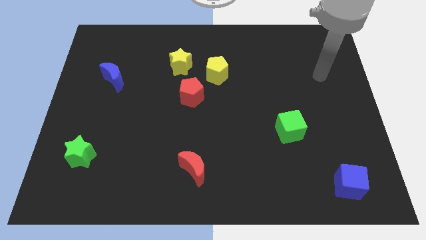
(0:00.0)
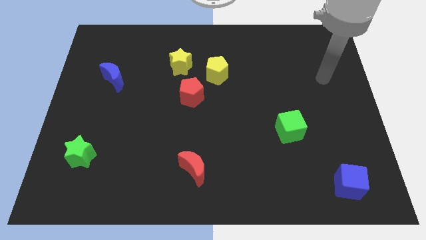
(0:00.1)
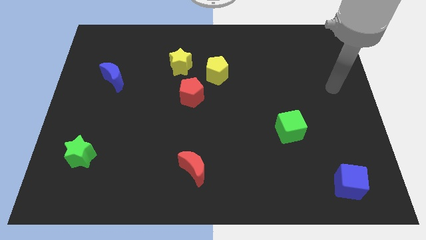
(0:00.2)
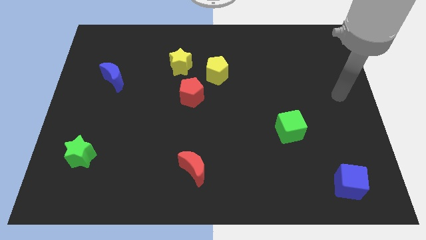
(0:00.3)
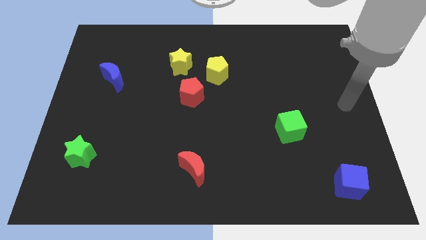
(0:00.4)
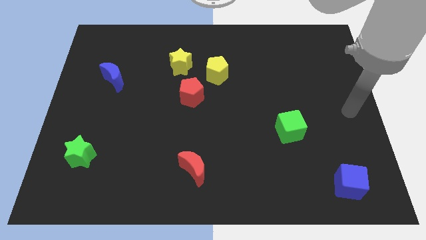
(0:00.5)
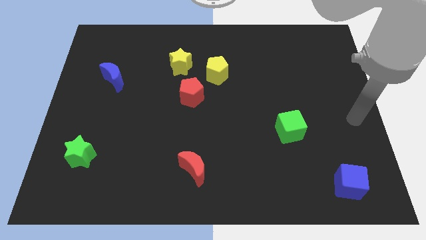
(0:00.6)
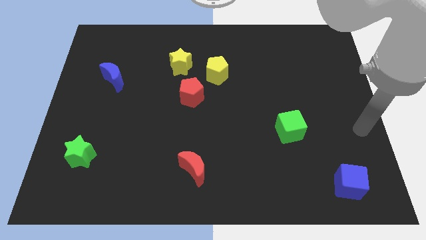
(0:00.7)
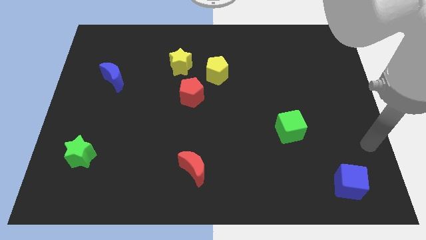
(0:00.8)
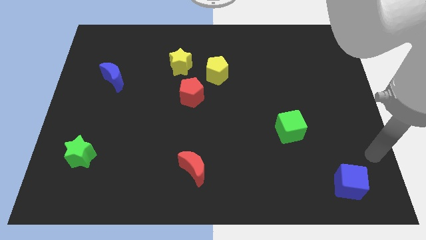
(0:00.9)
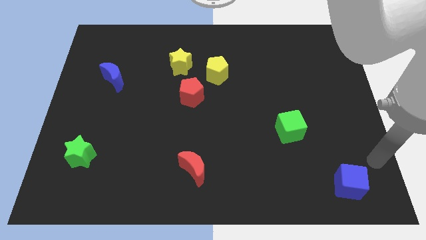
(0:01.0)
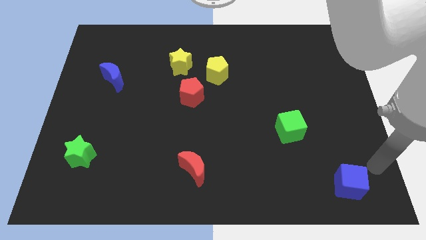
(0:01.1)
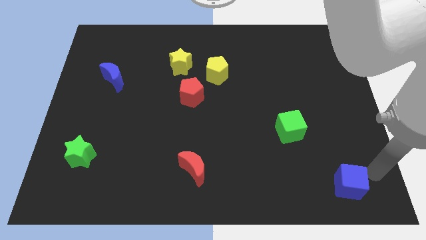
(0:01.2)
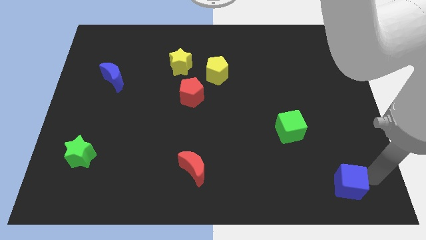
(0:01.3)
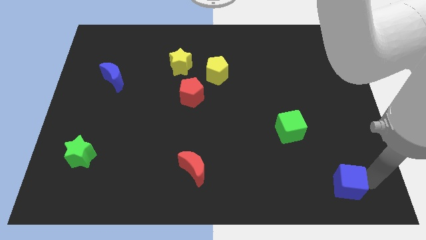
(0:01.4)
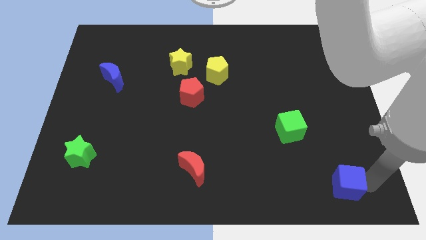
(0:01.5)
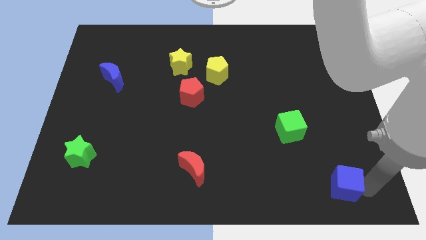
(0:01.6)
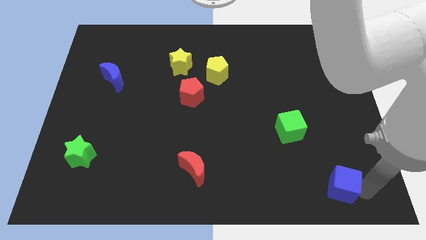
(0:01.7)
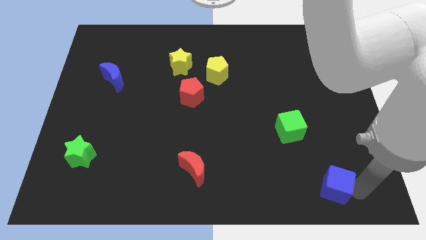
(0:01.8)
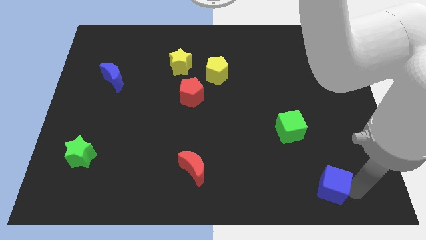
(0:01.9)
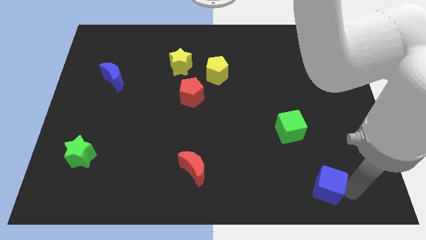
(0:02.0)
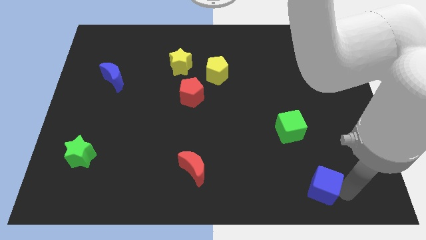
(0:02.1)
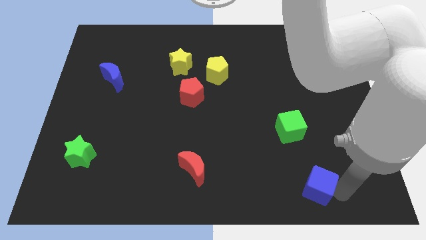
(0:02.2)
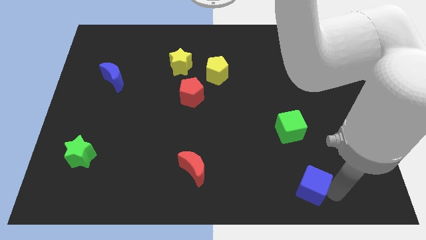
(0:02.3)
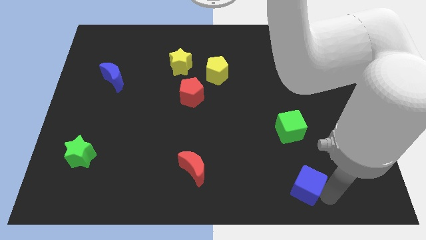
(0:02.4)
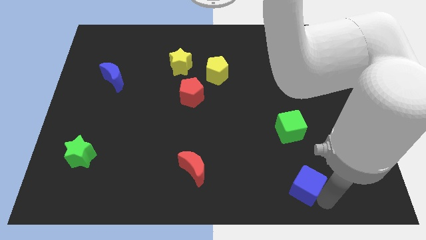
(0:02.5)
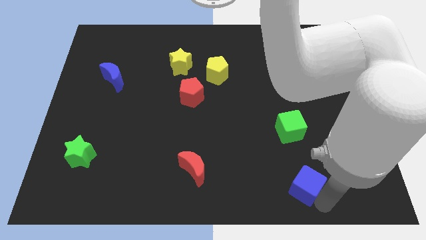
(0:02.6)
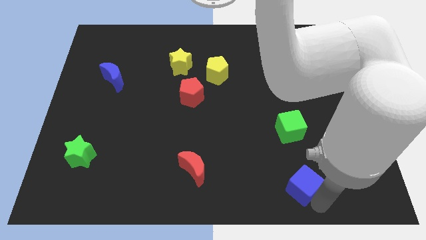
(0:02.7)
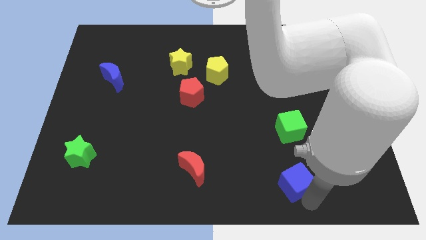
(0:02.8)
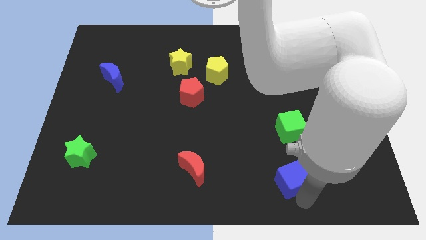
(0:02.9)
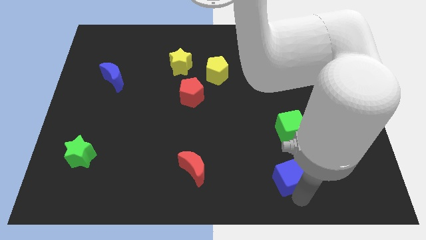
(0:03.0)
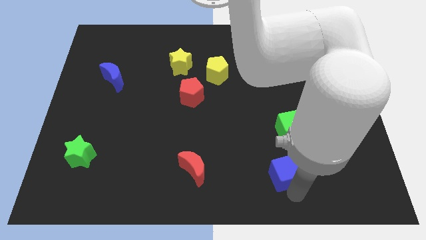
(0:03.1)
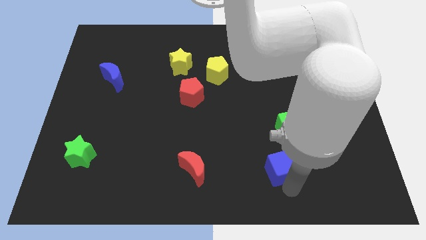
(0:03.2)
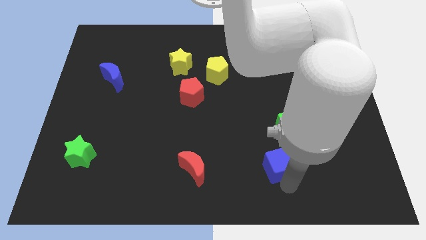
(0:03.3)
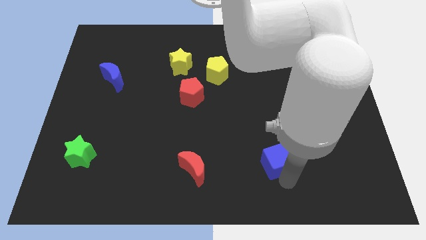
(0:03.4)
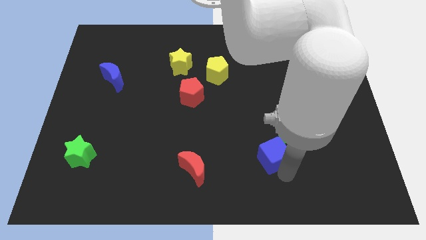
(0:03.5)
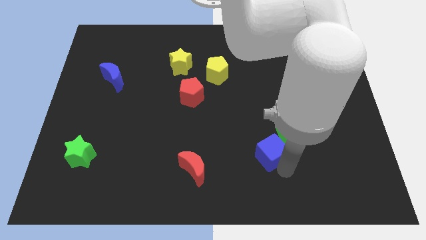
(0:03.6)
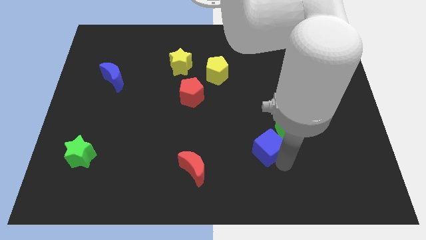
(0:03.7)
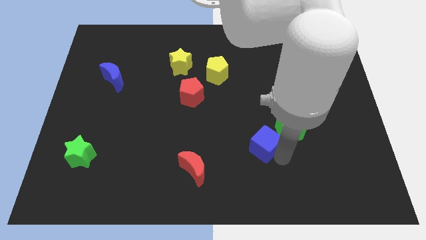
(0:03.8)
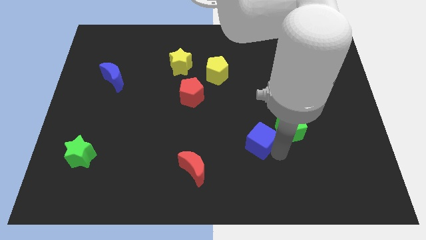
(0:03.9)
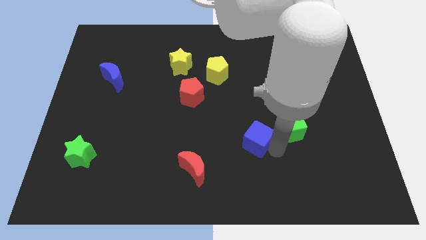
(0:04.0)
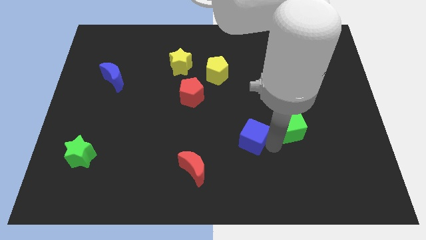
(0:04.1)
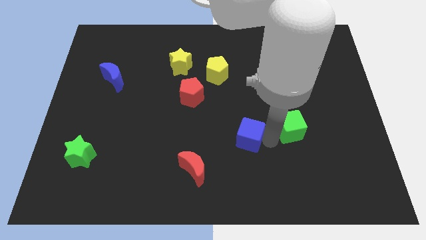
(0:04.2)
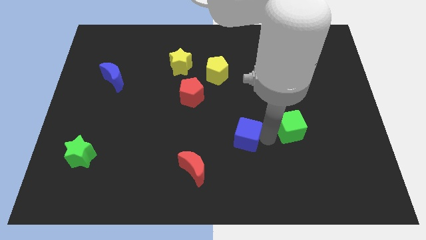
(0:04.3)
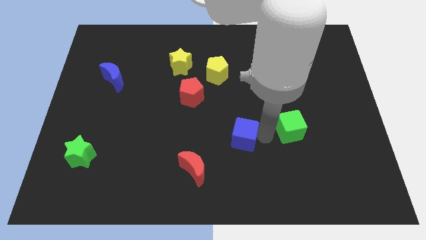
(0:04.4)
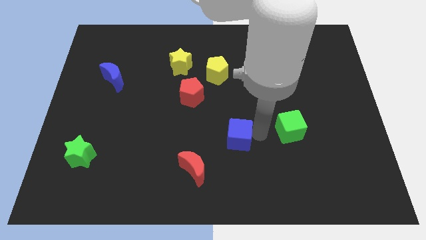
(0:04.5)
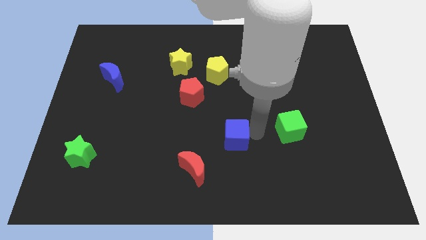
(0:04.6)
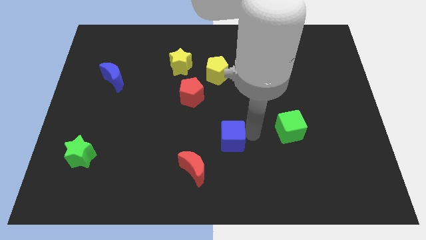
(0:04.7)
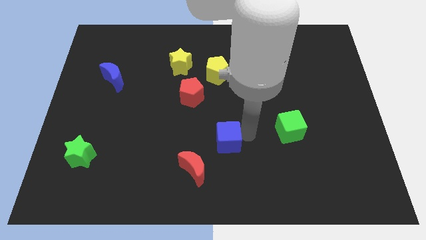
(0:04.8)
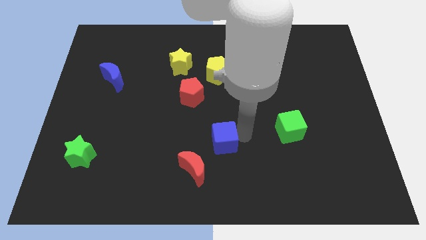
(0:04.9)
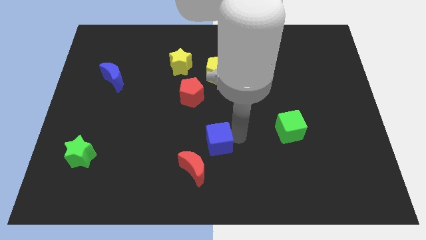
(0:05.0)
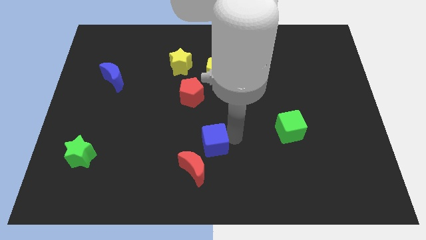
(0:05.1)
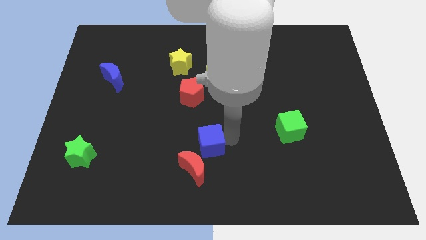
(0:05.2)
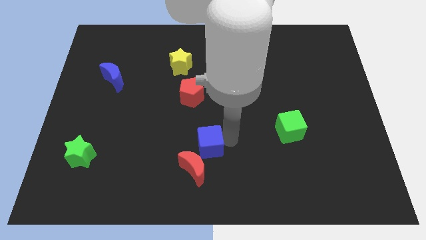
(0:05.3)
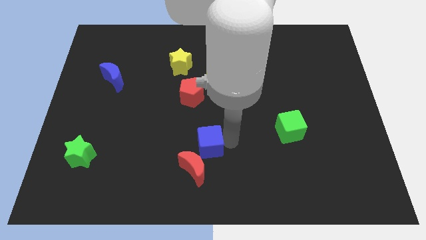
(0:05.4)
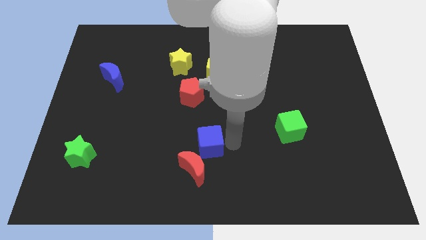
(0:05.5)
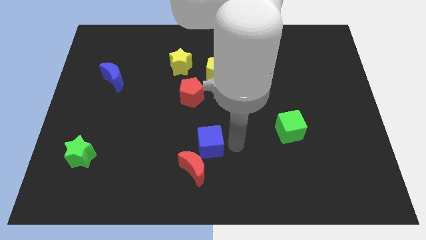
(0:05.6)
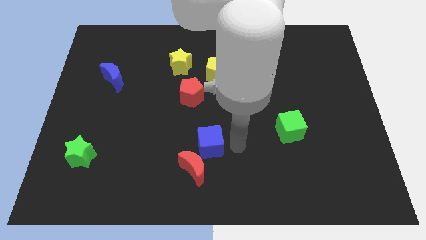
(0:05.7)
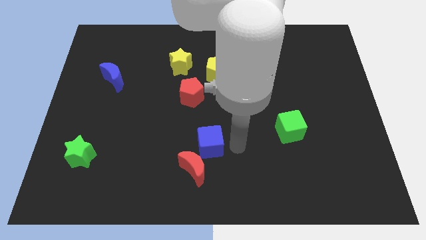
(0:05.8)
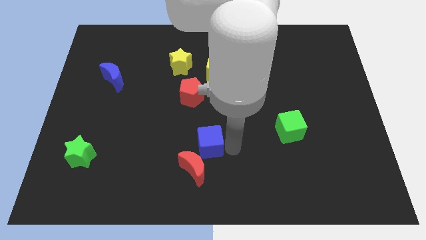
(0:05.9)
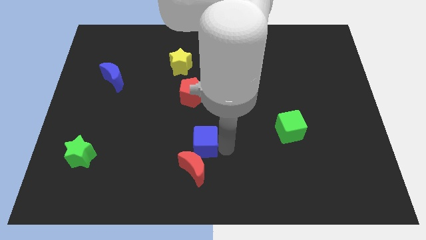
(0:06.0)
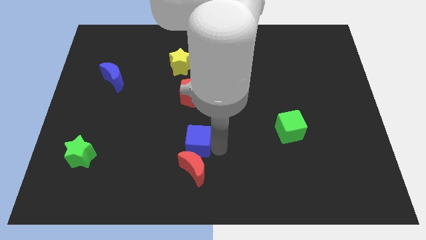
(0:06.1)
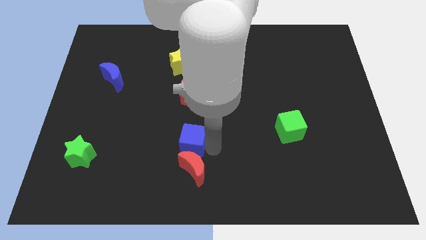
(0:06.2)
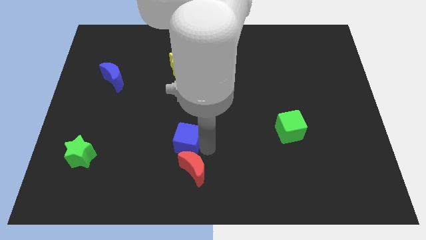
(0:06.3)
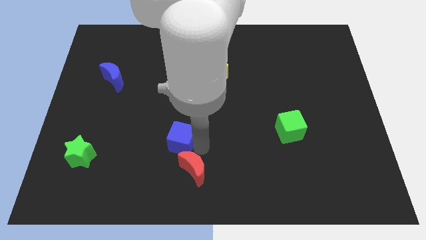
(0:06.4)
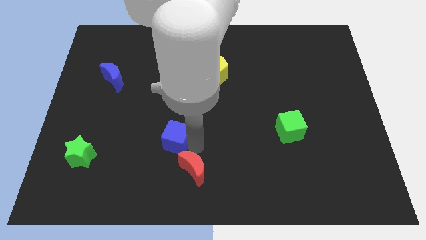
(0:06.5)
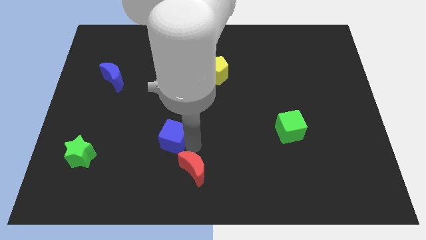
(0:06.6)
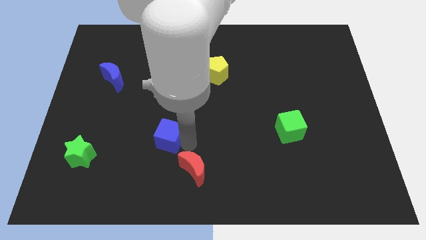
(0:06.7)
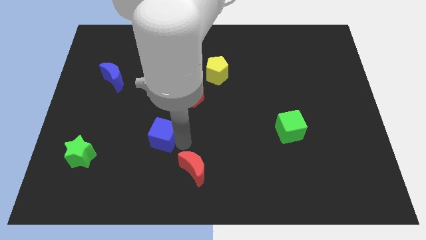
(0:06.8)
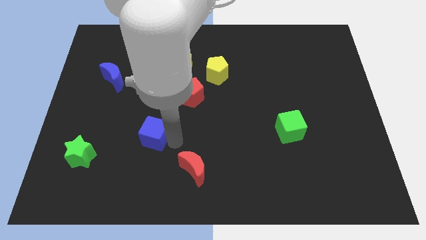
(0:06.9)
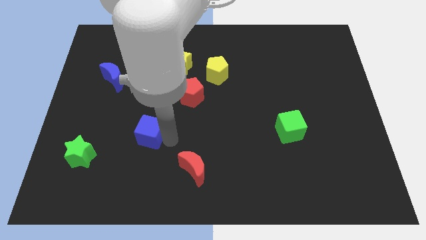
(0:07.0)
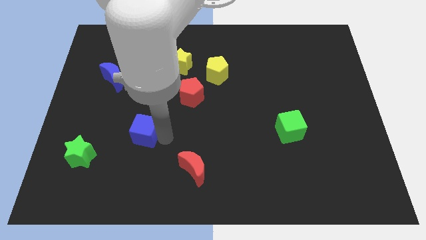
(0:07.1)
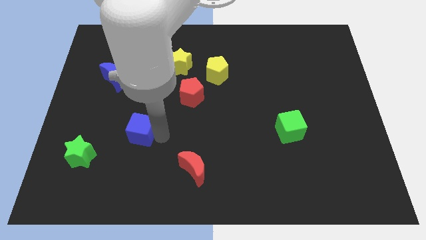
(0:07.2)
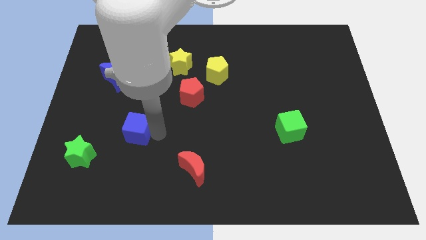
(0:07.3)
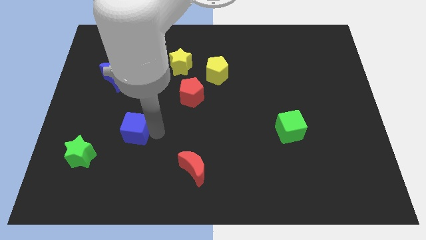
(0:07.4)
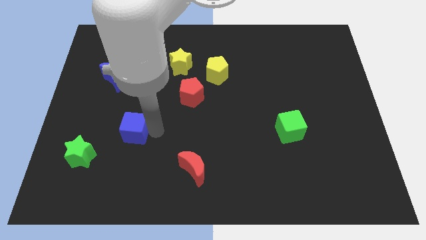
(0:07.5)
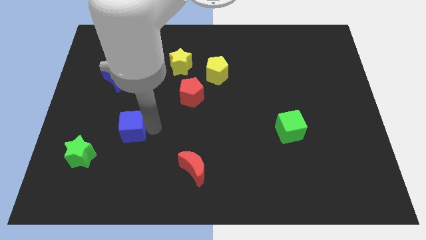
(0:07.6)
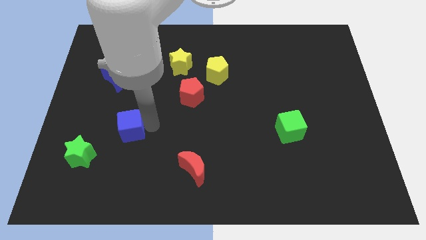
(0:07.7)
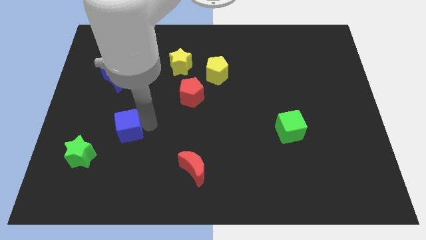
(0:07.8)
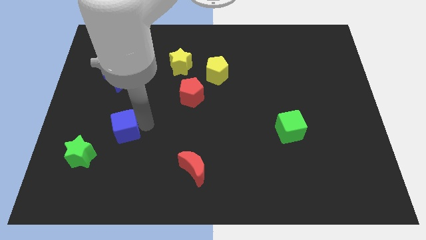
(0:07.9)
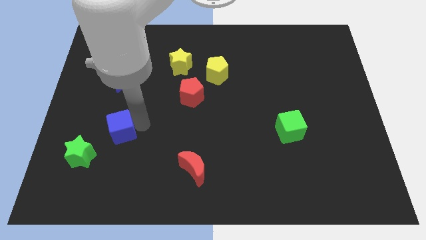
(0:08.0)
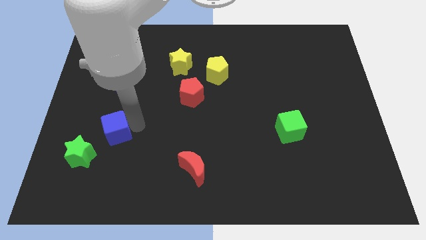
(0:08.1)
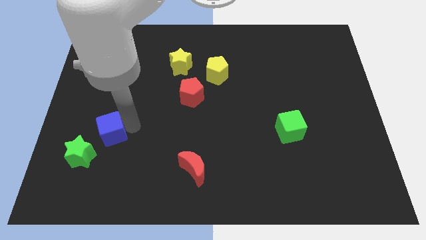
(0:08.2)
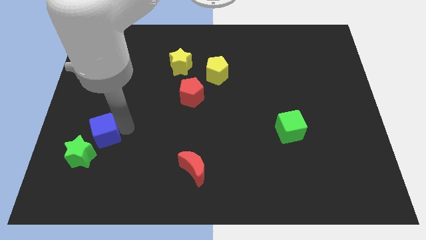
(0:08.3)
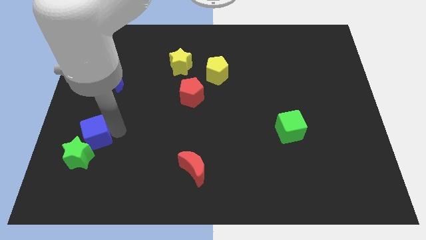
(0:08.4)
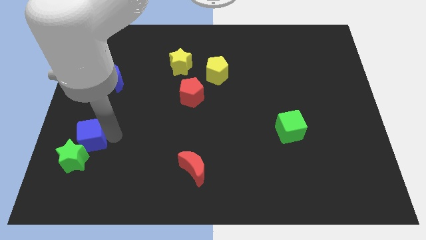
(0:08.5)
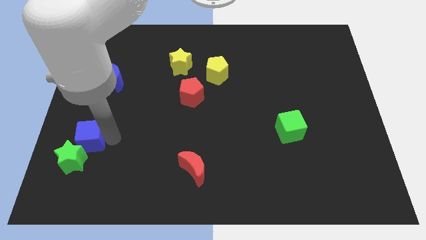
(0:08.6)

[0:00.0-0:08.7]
slide the blue cube to the green star
